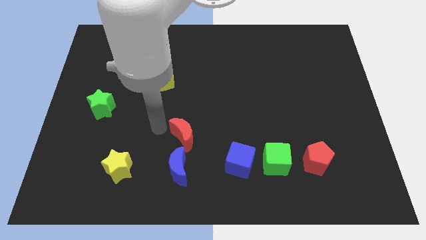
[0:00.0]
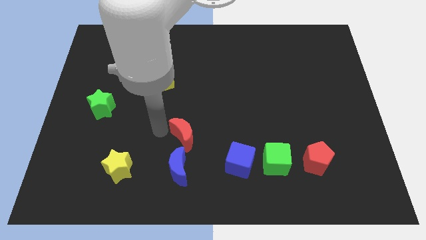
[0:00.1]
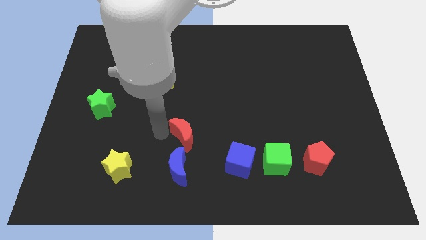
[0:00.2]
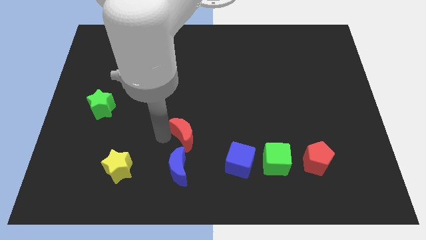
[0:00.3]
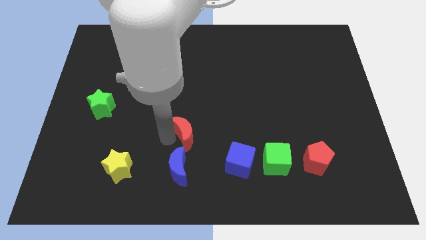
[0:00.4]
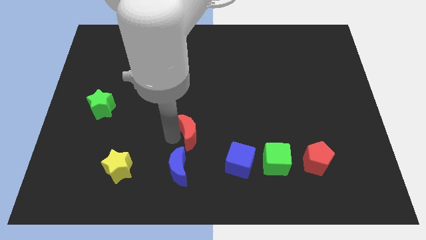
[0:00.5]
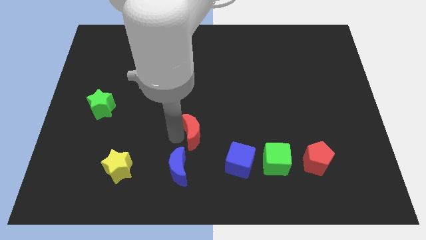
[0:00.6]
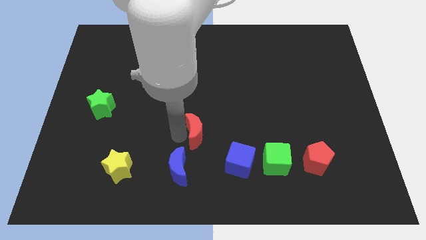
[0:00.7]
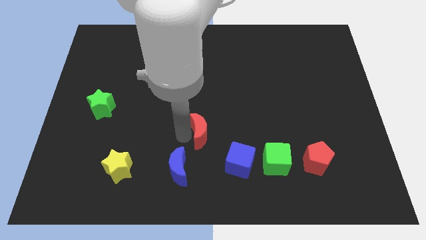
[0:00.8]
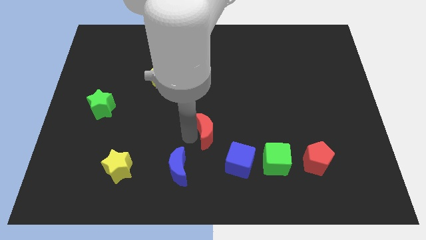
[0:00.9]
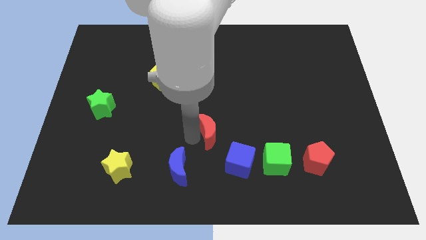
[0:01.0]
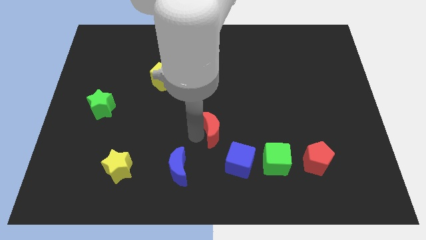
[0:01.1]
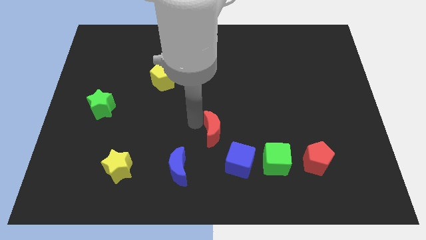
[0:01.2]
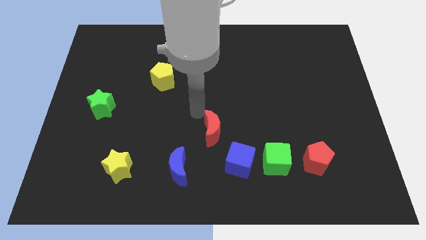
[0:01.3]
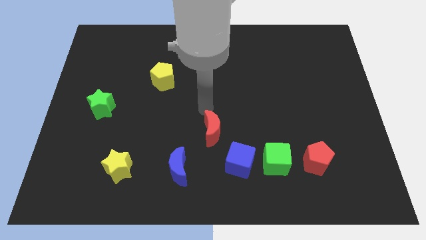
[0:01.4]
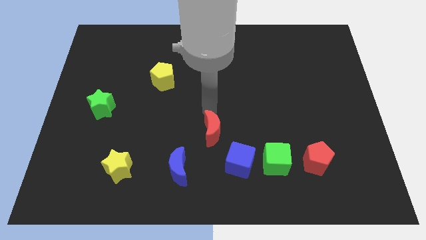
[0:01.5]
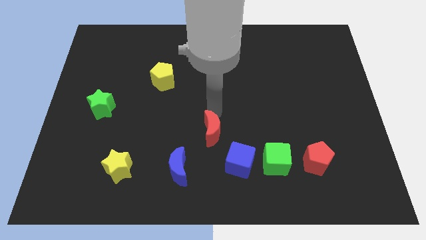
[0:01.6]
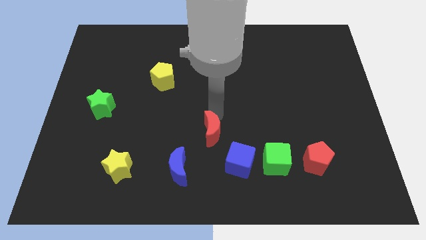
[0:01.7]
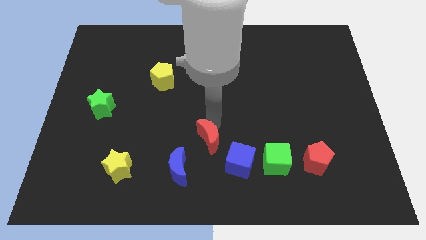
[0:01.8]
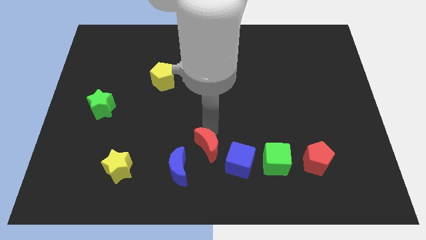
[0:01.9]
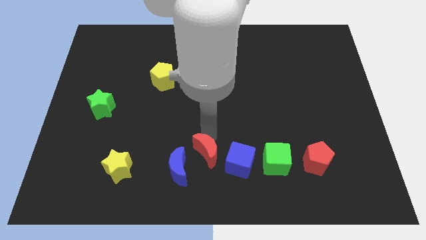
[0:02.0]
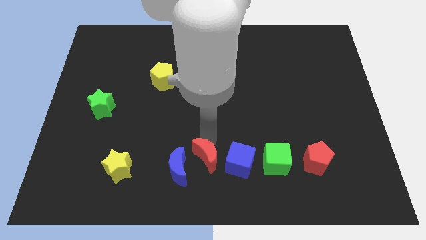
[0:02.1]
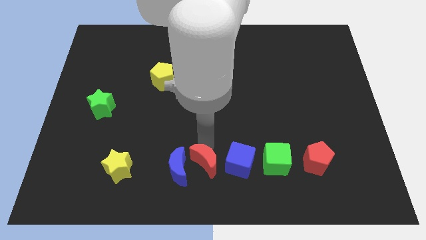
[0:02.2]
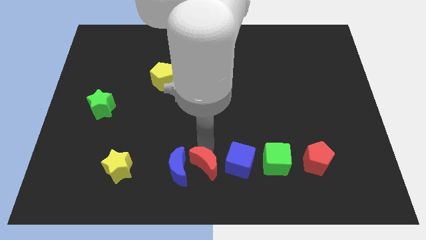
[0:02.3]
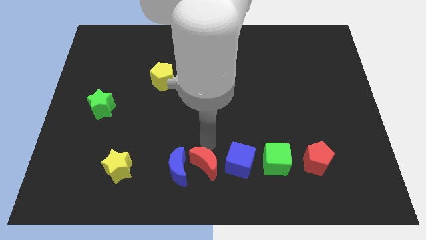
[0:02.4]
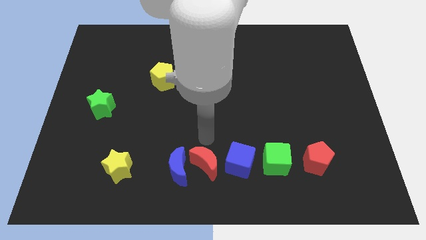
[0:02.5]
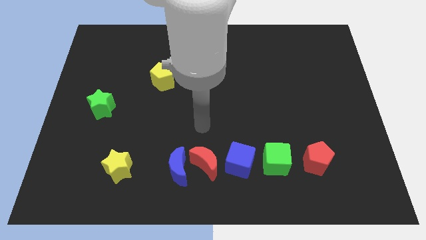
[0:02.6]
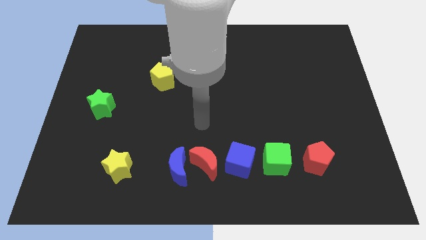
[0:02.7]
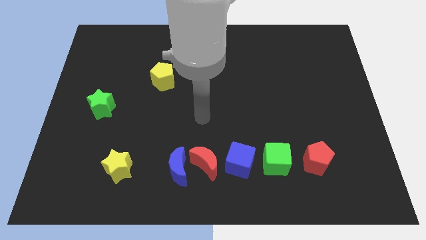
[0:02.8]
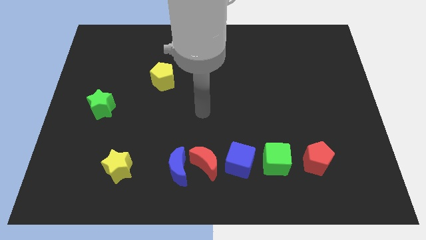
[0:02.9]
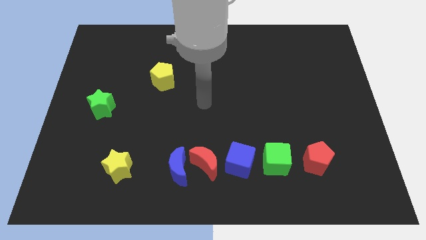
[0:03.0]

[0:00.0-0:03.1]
place red moon between blue moon and blue cube

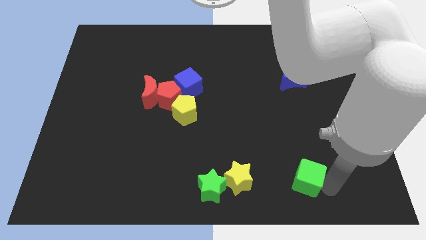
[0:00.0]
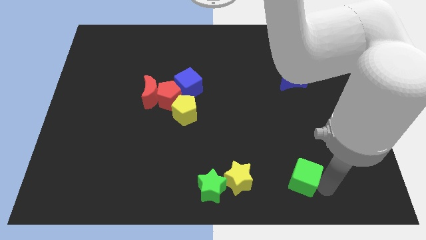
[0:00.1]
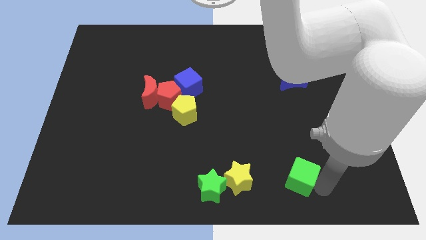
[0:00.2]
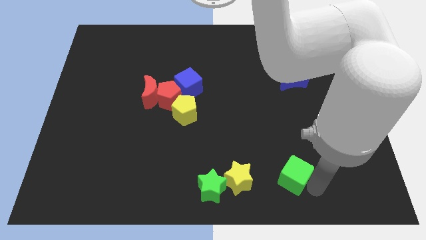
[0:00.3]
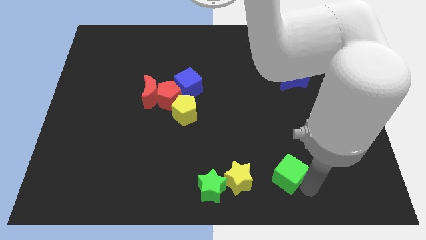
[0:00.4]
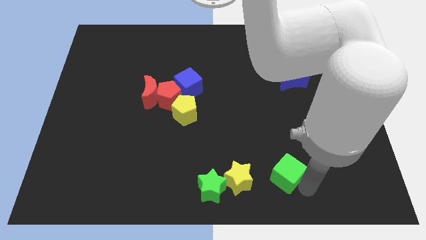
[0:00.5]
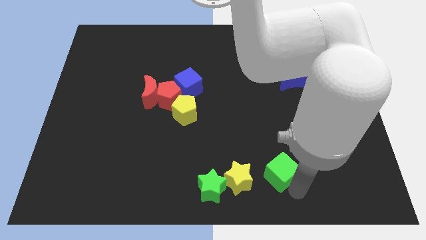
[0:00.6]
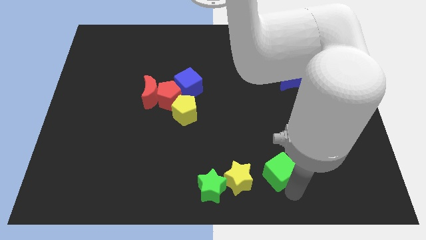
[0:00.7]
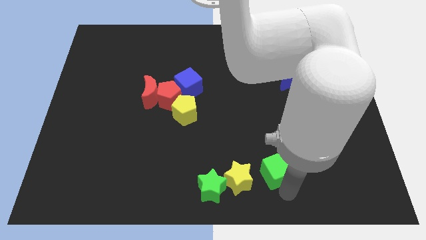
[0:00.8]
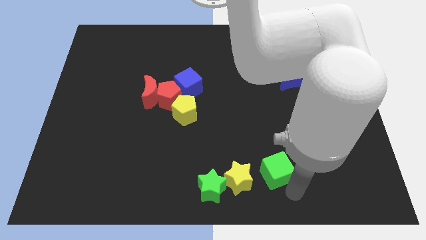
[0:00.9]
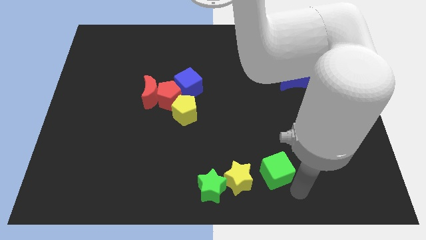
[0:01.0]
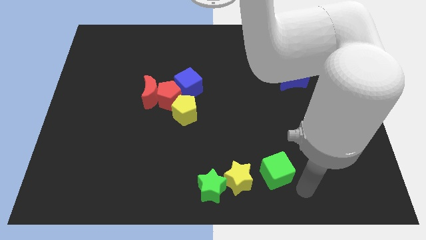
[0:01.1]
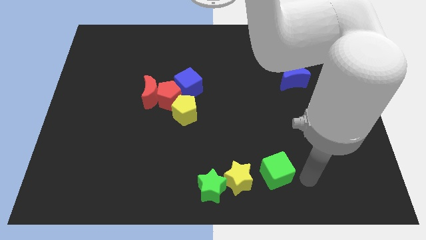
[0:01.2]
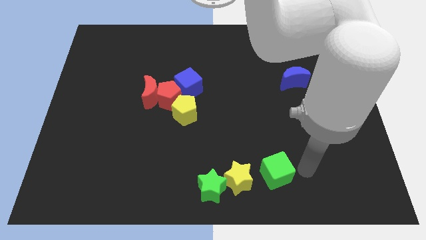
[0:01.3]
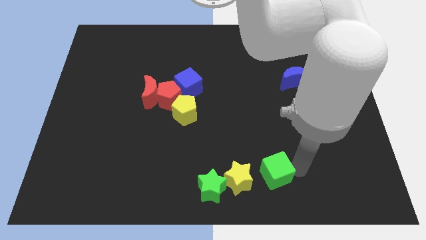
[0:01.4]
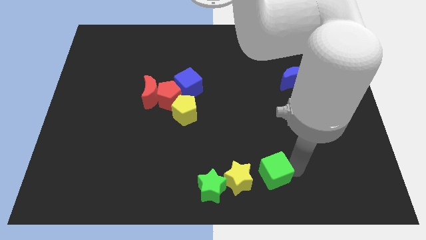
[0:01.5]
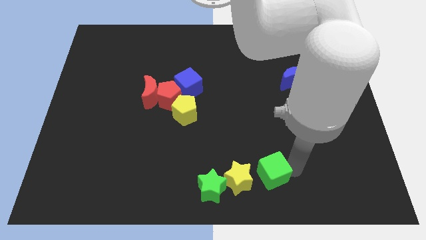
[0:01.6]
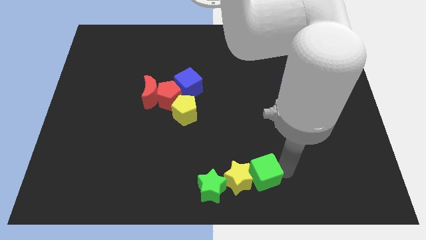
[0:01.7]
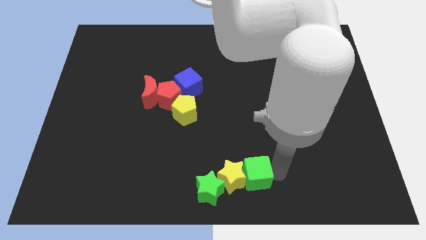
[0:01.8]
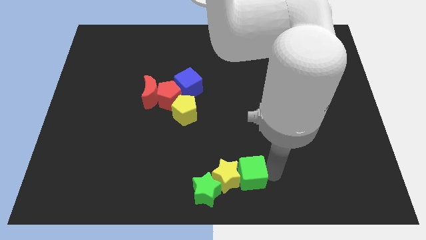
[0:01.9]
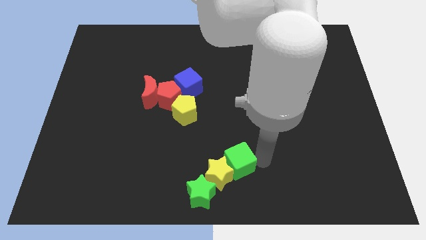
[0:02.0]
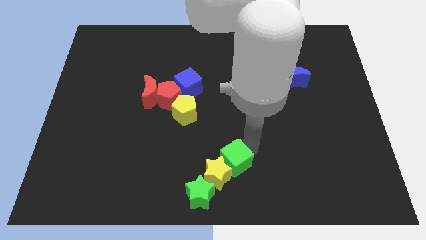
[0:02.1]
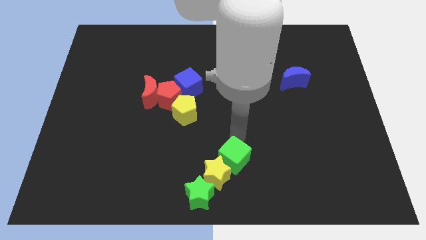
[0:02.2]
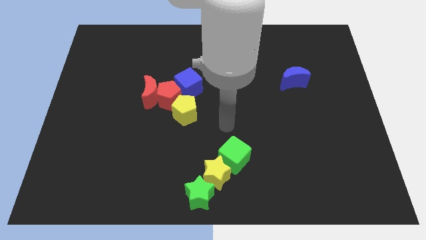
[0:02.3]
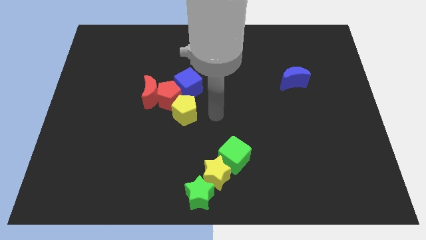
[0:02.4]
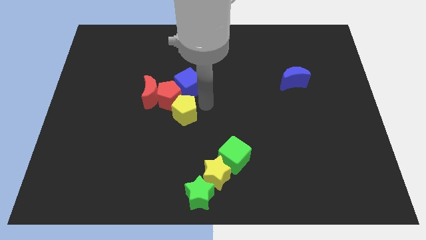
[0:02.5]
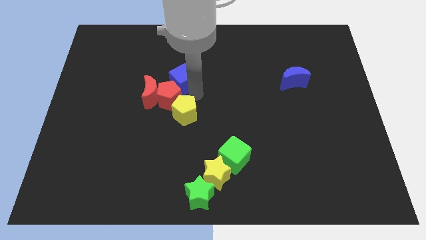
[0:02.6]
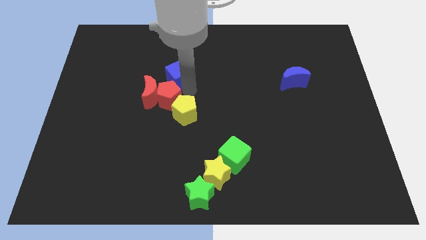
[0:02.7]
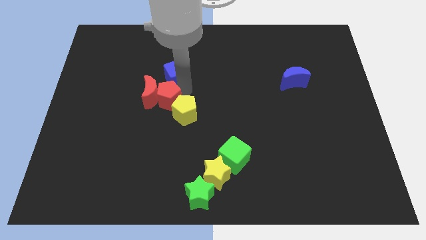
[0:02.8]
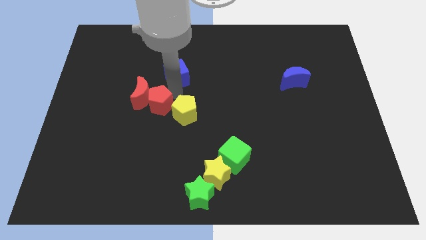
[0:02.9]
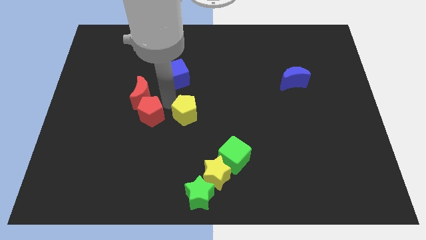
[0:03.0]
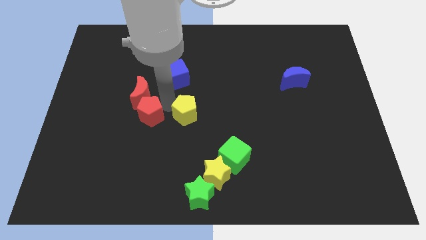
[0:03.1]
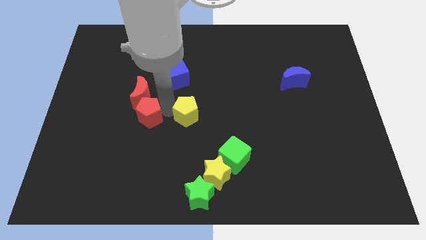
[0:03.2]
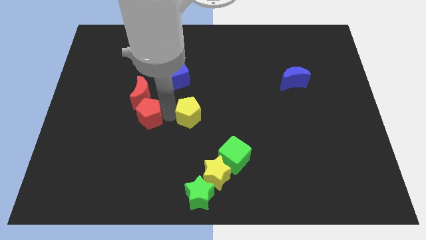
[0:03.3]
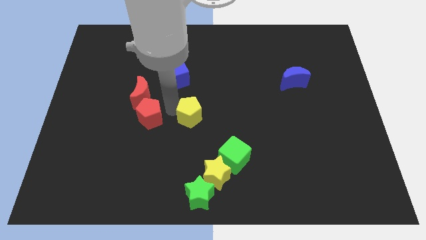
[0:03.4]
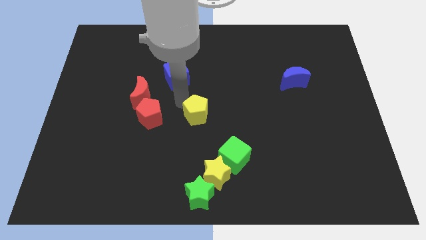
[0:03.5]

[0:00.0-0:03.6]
place the arm between the yellow pentagon and red pentagon

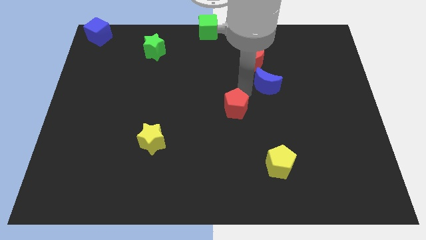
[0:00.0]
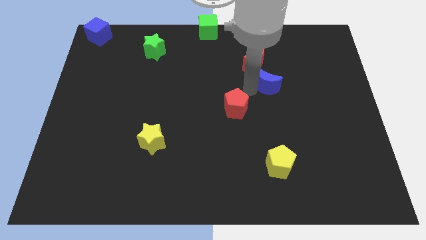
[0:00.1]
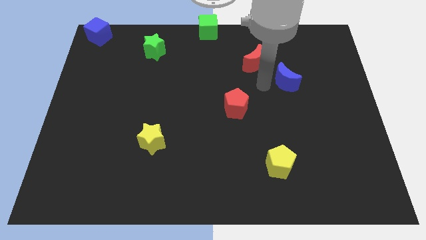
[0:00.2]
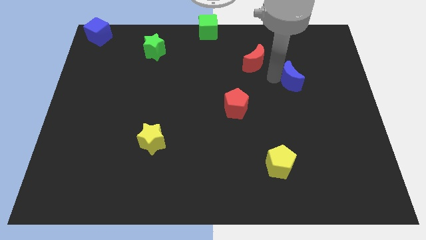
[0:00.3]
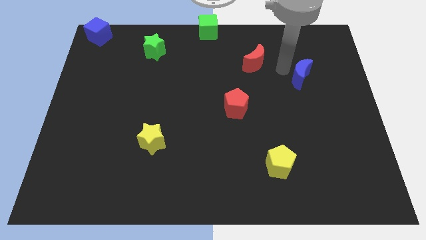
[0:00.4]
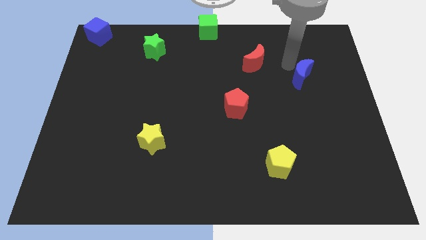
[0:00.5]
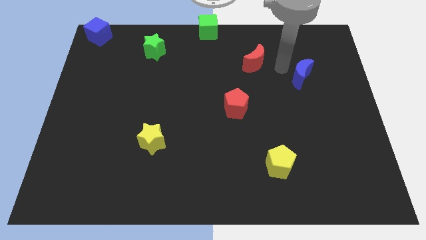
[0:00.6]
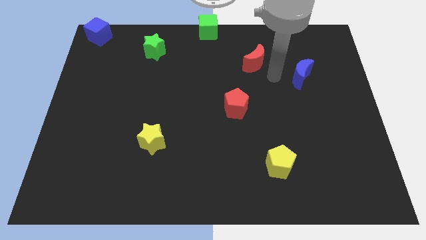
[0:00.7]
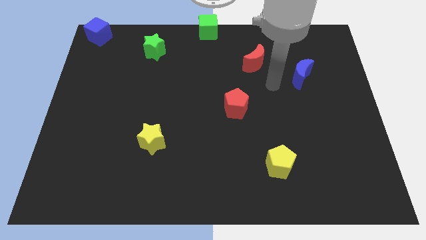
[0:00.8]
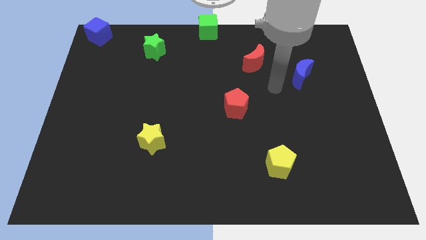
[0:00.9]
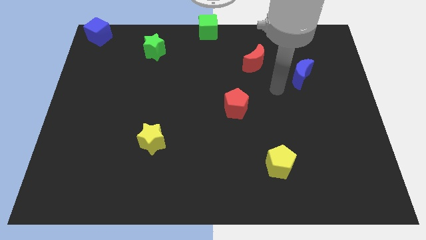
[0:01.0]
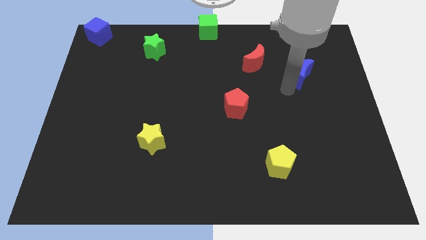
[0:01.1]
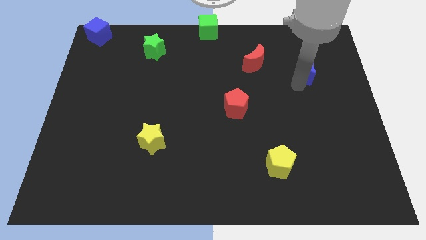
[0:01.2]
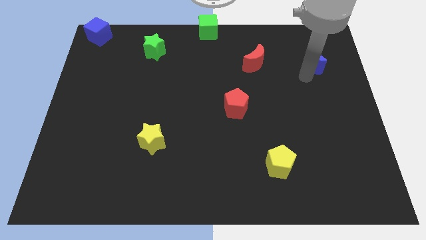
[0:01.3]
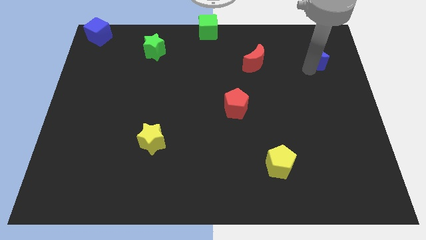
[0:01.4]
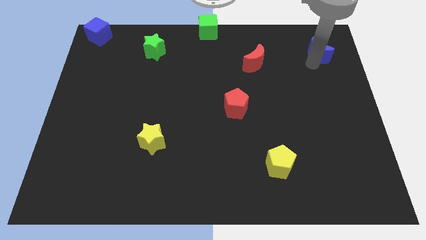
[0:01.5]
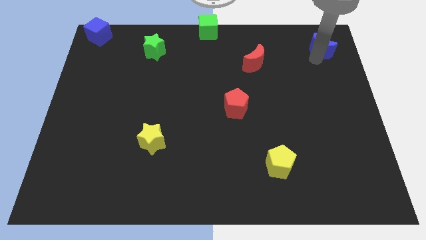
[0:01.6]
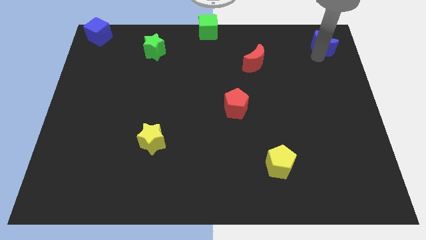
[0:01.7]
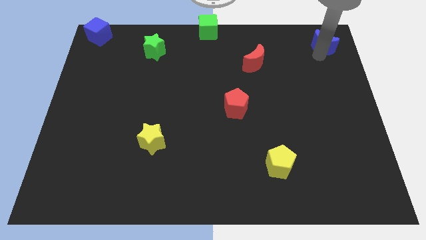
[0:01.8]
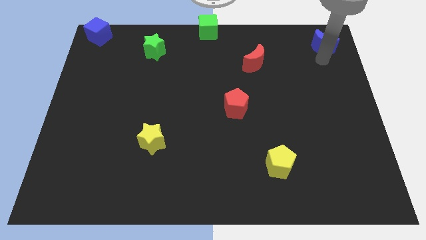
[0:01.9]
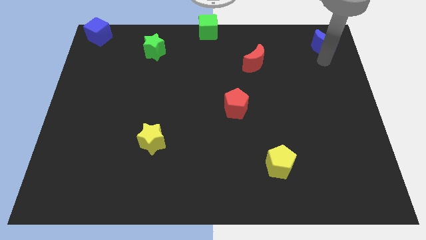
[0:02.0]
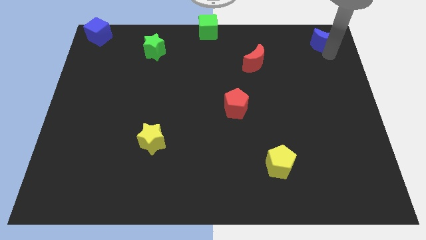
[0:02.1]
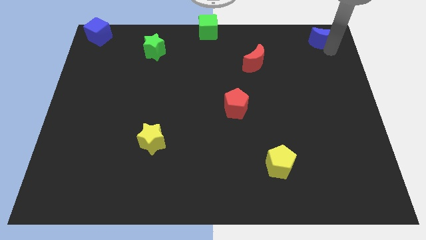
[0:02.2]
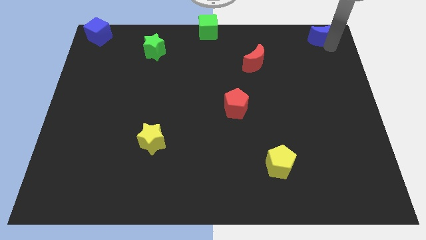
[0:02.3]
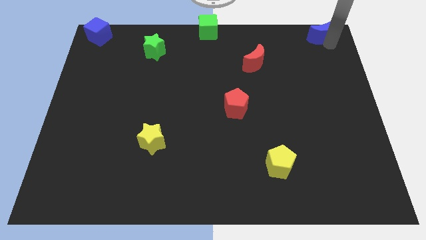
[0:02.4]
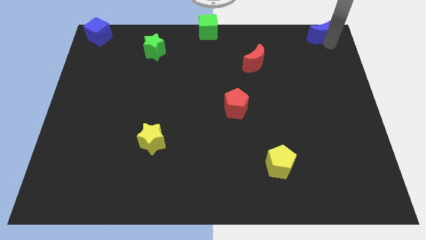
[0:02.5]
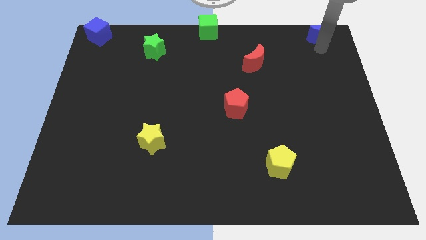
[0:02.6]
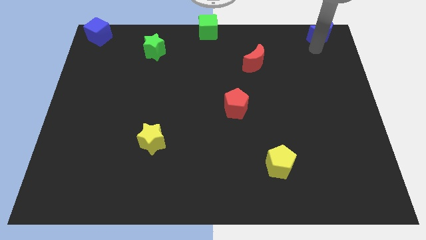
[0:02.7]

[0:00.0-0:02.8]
move the blue moon to the top right side of the board
